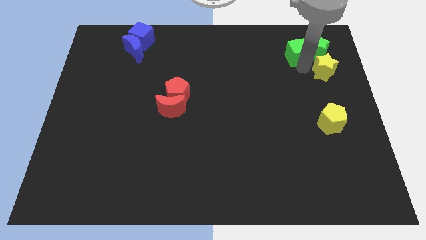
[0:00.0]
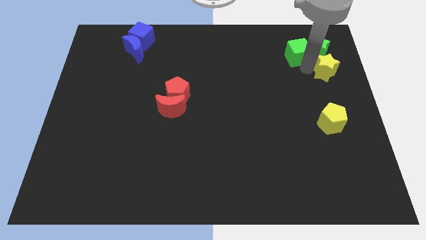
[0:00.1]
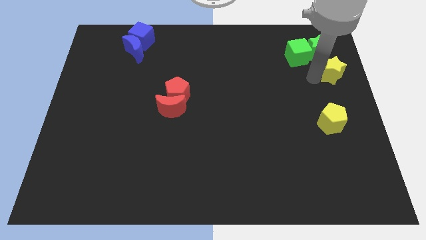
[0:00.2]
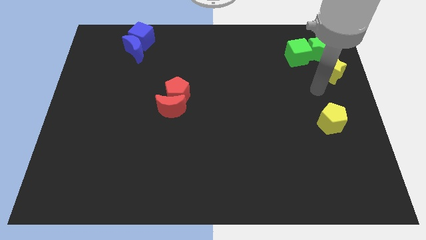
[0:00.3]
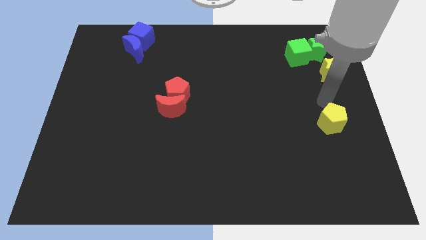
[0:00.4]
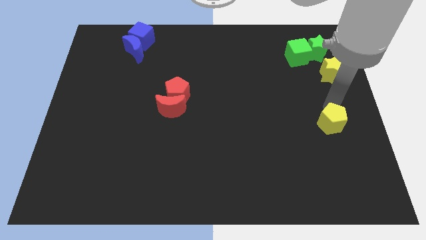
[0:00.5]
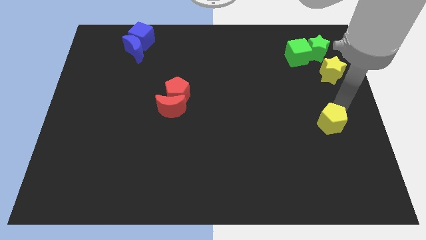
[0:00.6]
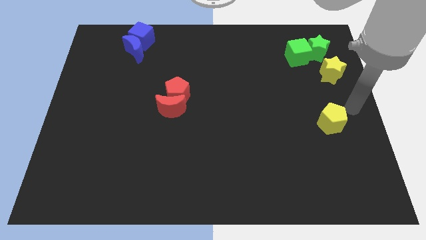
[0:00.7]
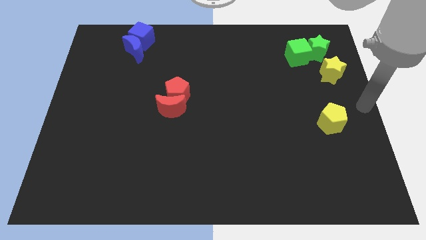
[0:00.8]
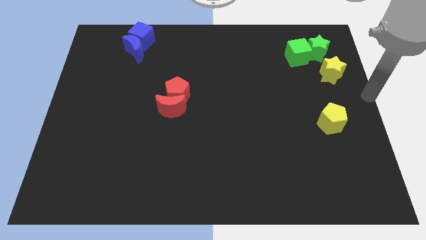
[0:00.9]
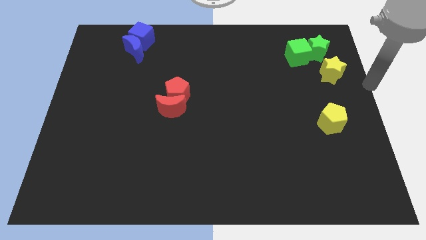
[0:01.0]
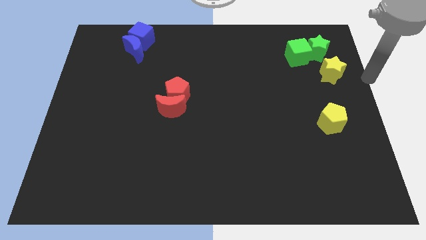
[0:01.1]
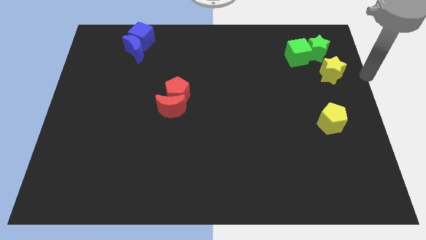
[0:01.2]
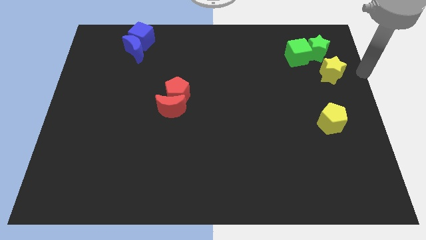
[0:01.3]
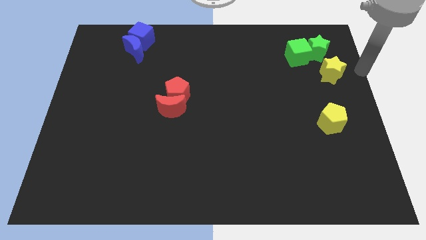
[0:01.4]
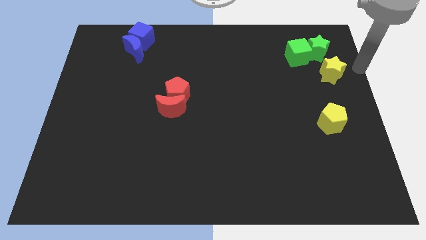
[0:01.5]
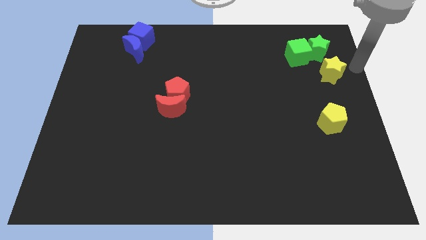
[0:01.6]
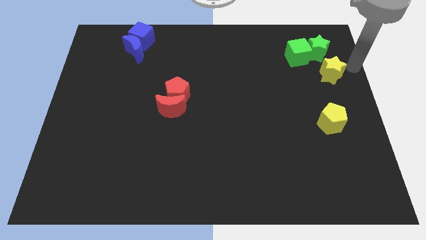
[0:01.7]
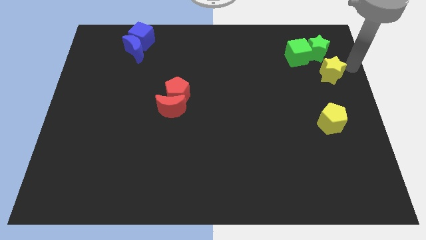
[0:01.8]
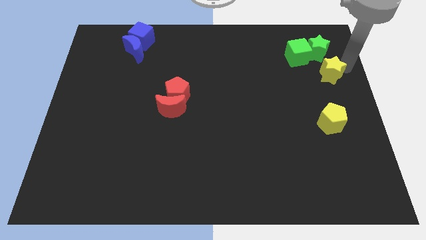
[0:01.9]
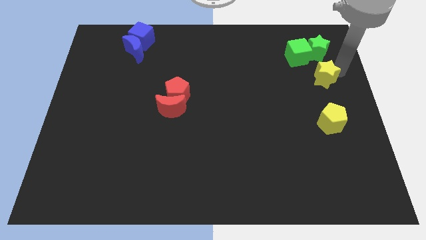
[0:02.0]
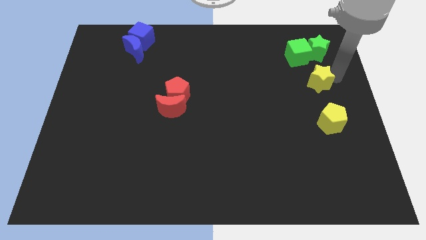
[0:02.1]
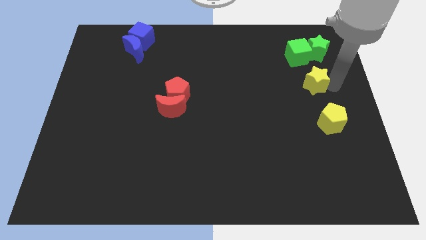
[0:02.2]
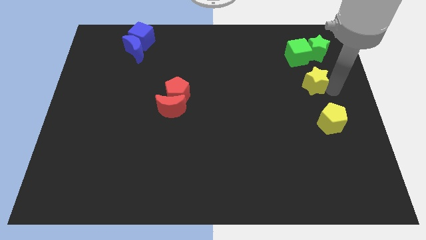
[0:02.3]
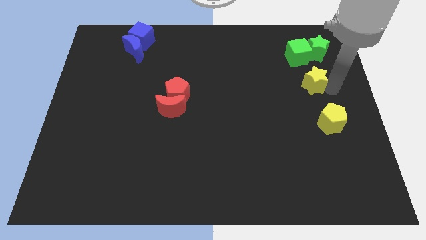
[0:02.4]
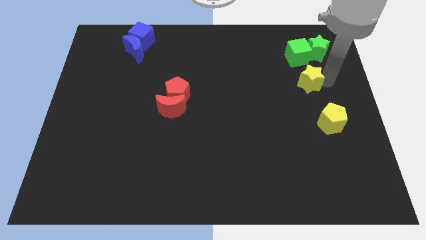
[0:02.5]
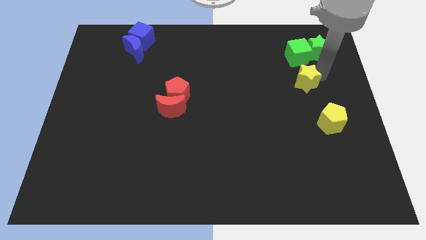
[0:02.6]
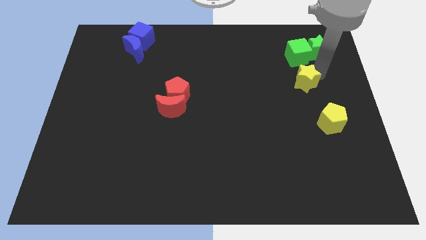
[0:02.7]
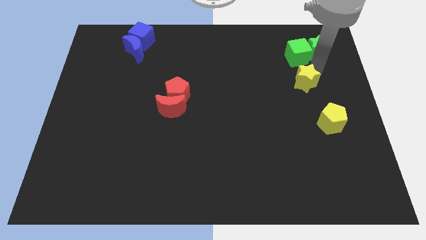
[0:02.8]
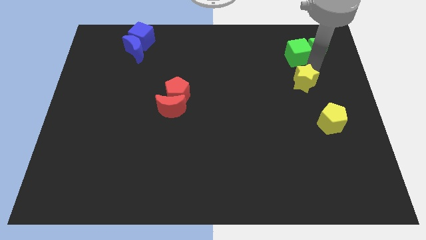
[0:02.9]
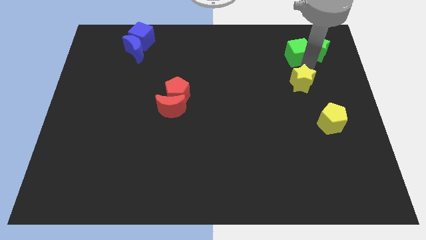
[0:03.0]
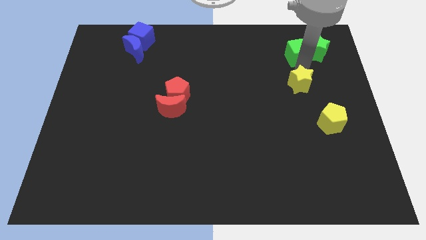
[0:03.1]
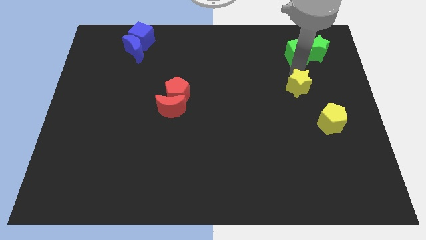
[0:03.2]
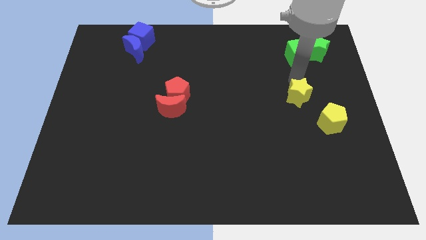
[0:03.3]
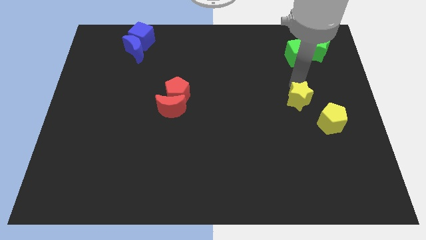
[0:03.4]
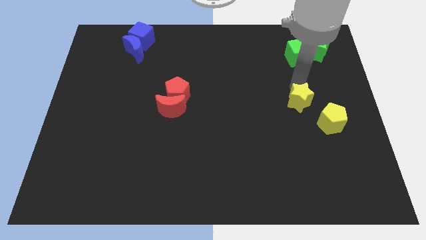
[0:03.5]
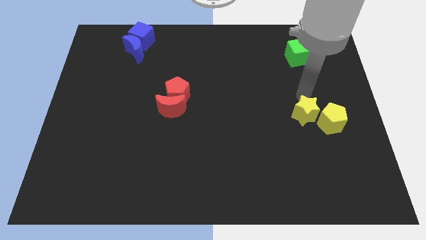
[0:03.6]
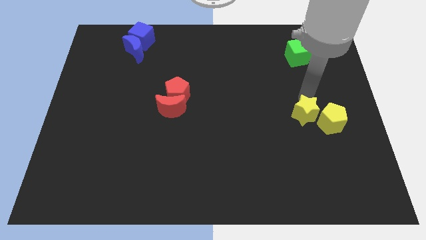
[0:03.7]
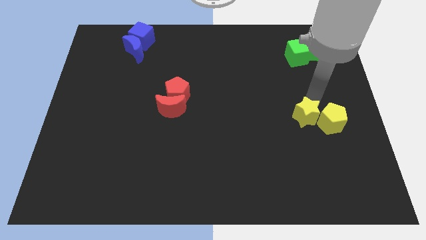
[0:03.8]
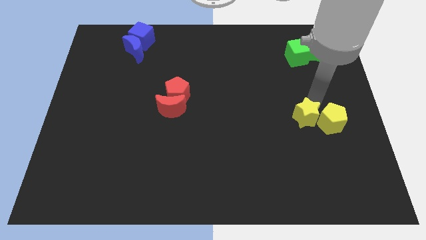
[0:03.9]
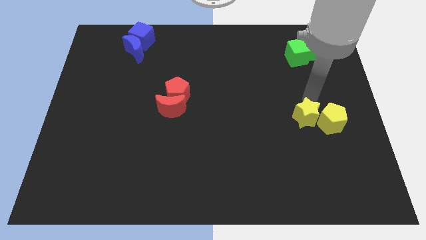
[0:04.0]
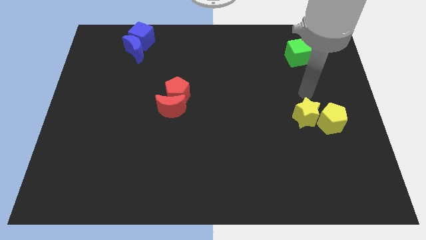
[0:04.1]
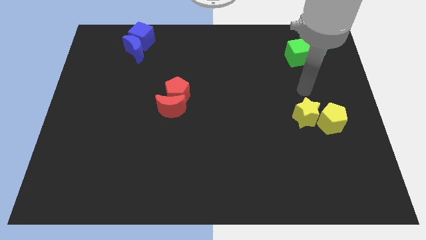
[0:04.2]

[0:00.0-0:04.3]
place the yellow star to the left of the yellow pentagon

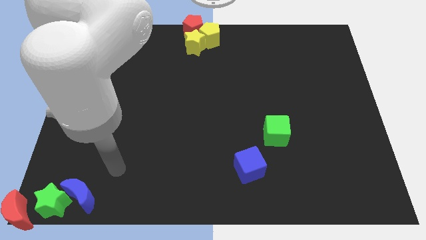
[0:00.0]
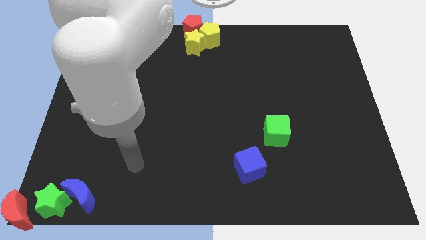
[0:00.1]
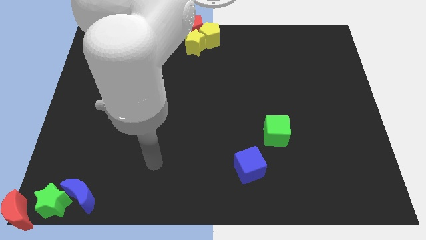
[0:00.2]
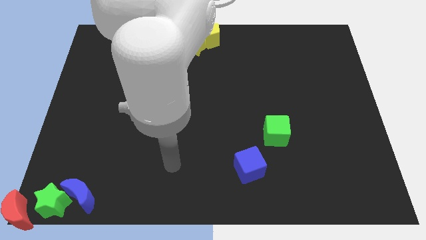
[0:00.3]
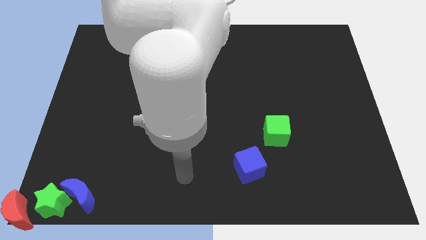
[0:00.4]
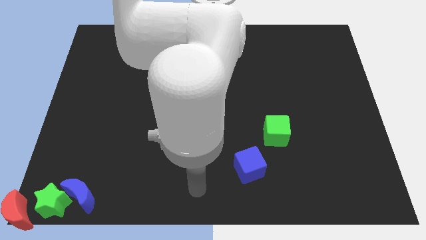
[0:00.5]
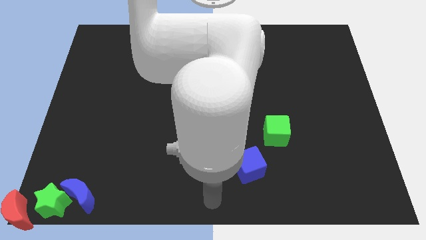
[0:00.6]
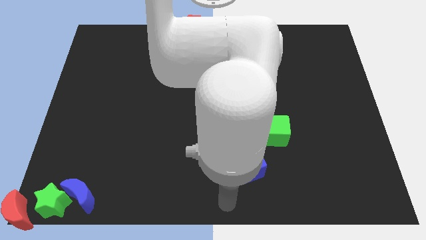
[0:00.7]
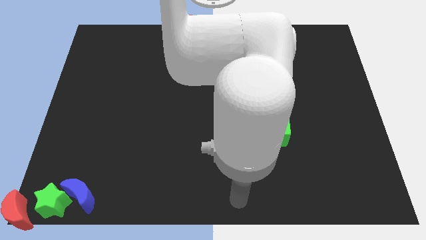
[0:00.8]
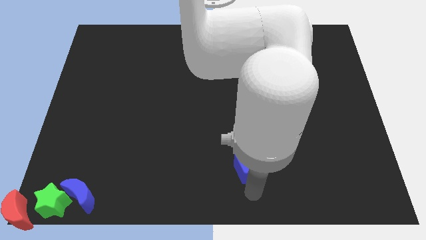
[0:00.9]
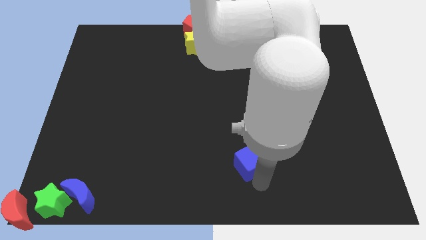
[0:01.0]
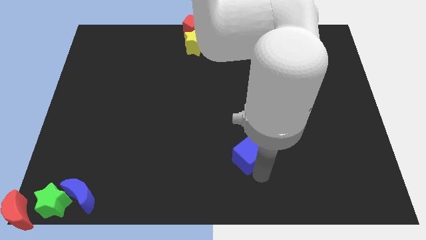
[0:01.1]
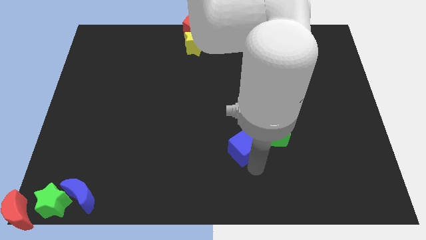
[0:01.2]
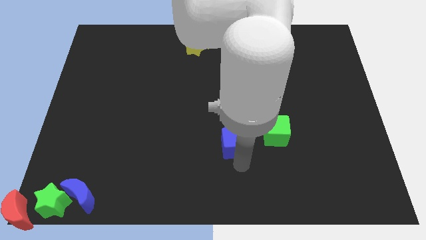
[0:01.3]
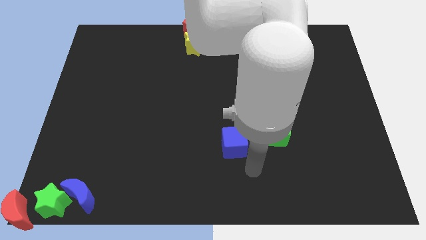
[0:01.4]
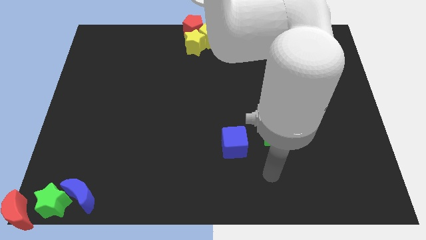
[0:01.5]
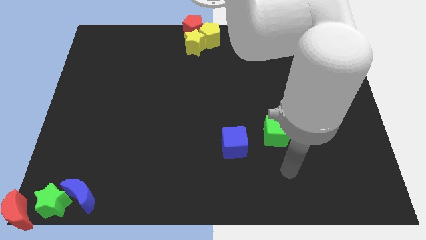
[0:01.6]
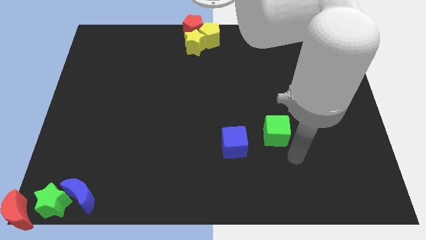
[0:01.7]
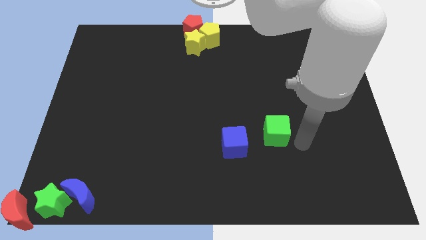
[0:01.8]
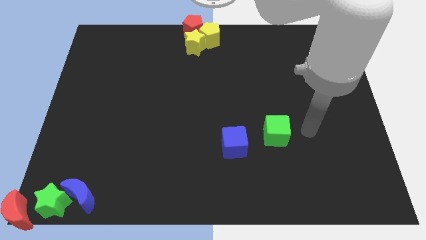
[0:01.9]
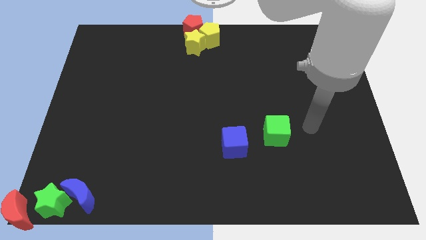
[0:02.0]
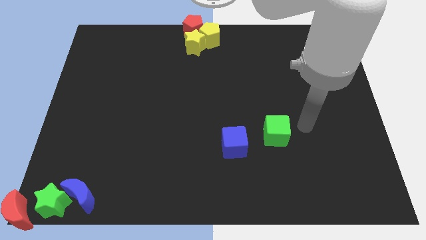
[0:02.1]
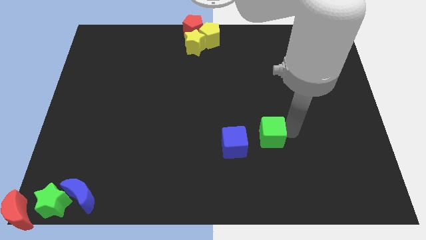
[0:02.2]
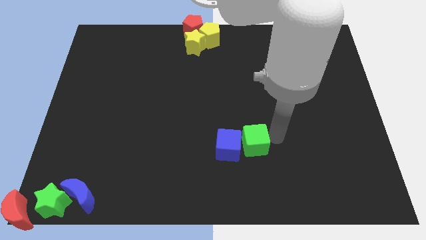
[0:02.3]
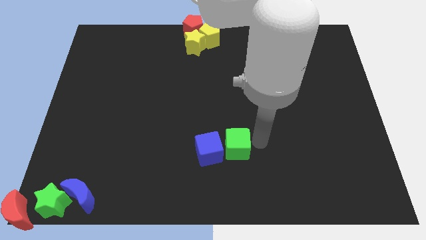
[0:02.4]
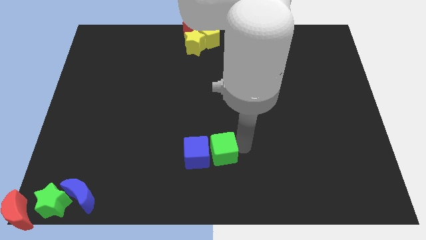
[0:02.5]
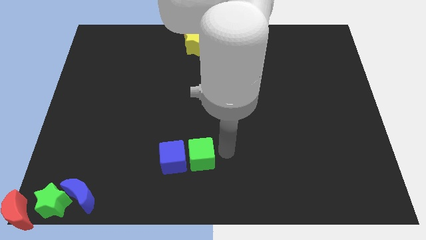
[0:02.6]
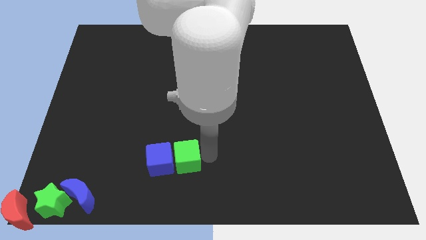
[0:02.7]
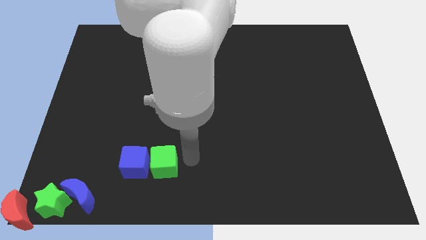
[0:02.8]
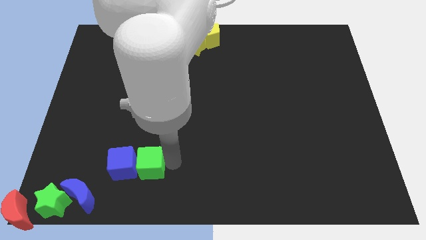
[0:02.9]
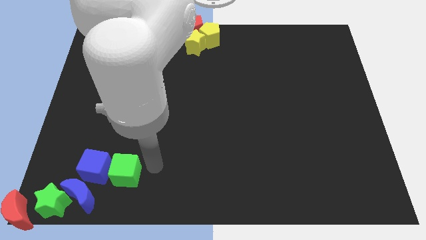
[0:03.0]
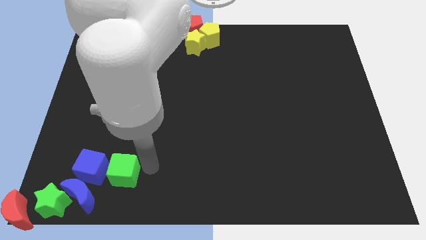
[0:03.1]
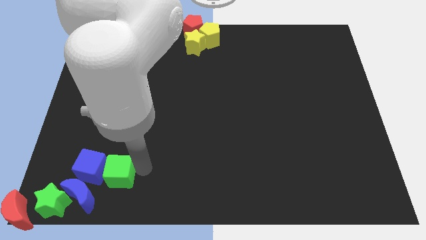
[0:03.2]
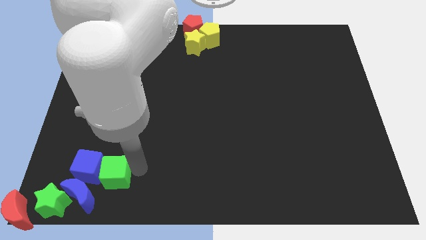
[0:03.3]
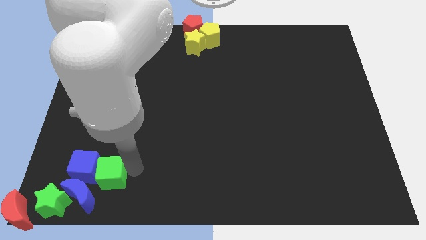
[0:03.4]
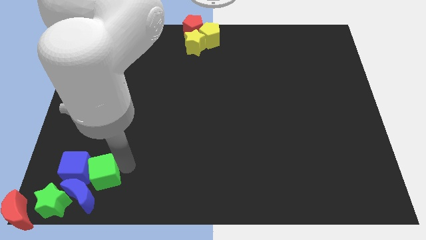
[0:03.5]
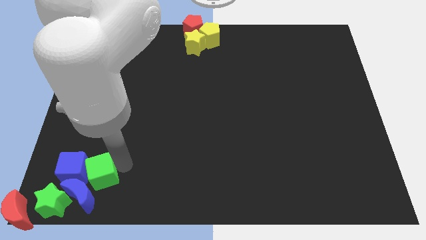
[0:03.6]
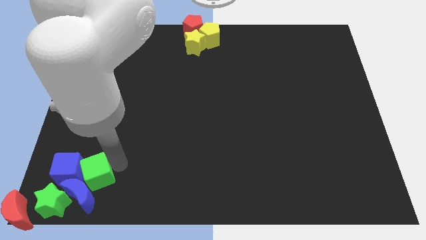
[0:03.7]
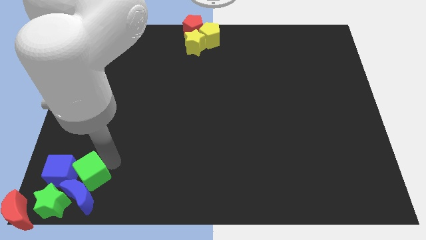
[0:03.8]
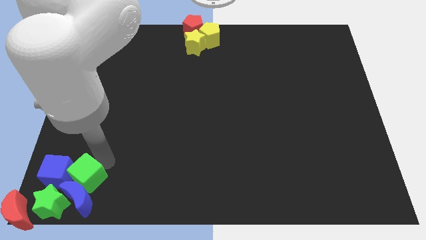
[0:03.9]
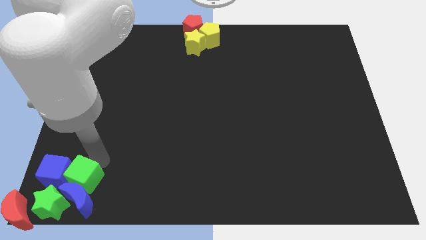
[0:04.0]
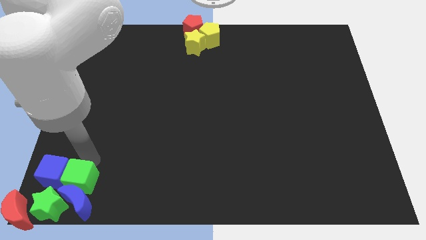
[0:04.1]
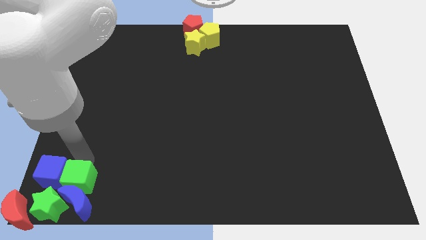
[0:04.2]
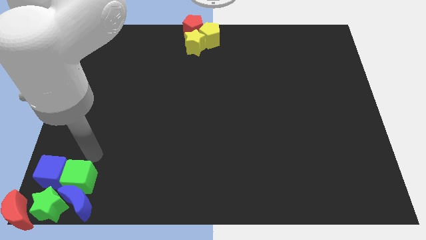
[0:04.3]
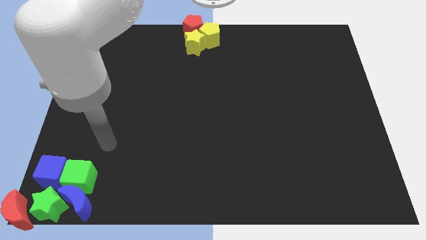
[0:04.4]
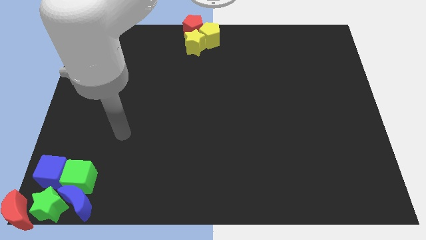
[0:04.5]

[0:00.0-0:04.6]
push green cube and the blue cube diagonally towards bottom left to the yellow blocks
